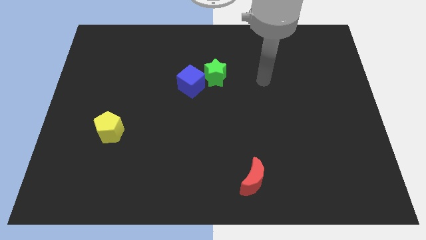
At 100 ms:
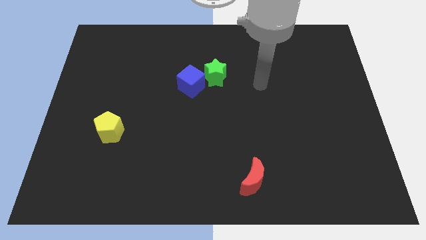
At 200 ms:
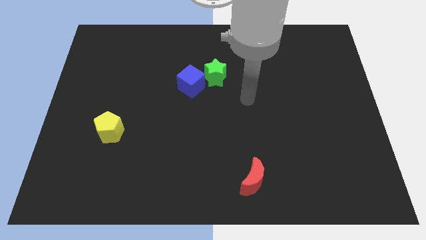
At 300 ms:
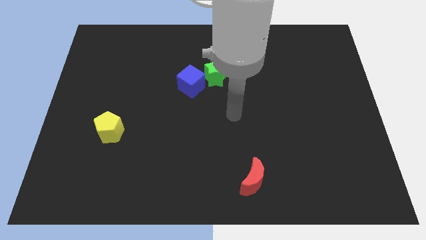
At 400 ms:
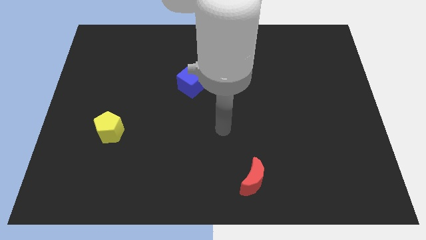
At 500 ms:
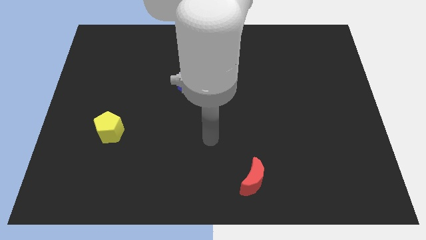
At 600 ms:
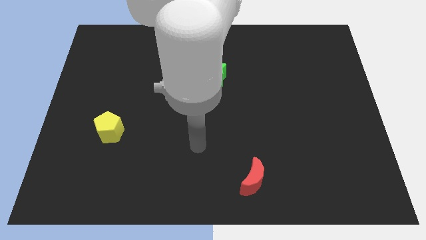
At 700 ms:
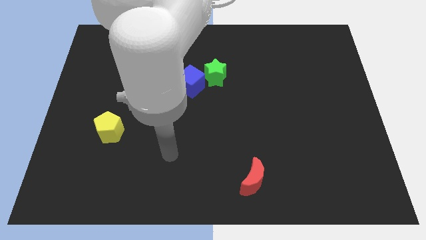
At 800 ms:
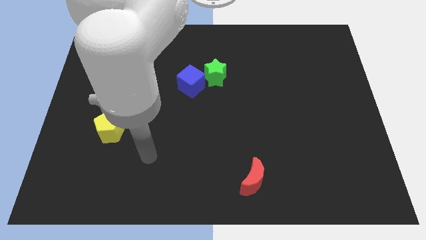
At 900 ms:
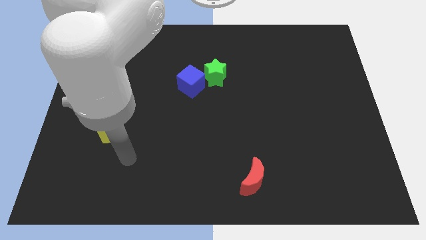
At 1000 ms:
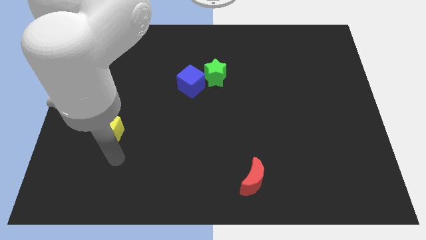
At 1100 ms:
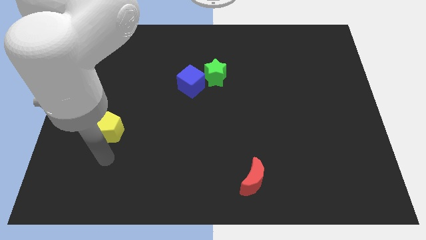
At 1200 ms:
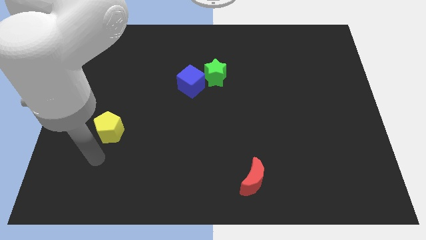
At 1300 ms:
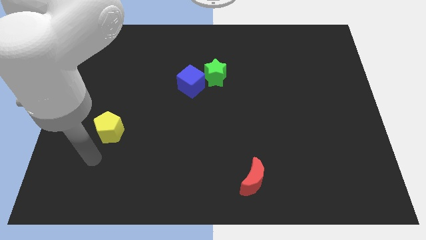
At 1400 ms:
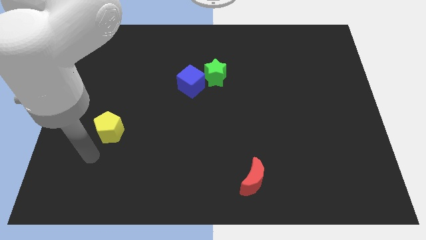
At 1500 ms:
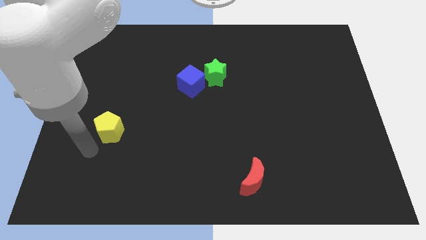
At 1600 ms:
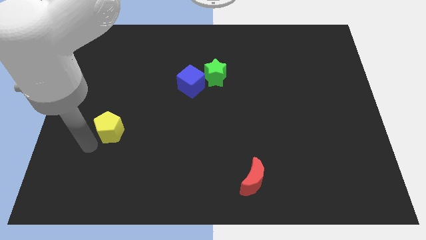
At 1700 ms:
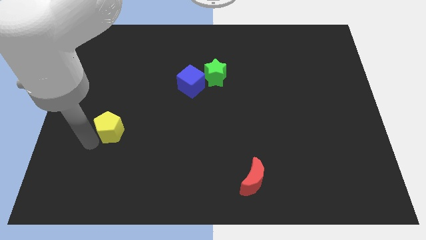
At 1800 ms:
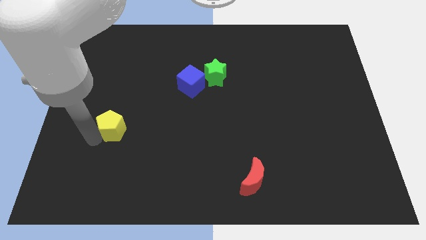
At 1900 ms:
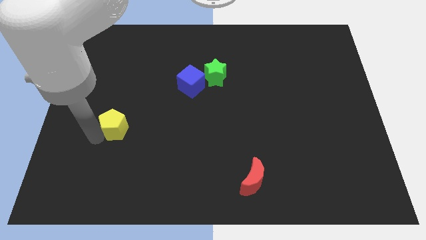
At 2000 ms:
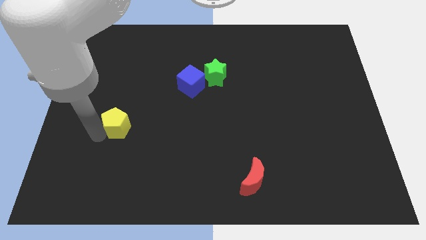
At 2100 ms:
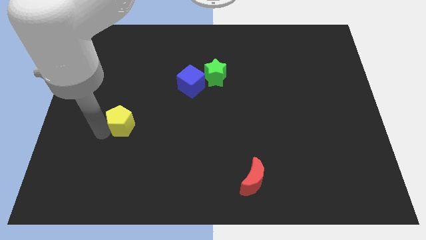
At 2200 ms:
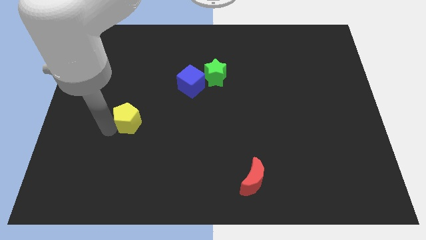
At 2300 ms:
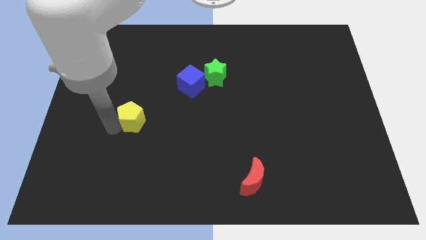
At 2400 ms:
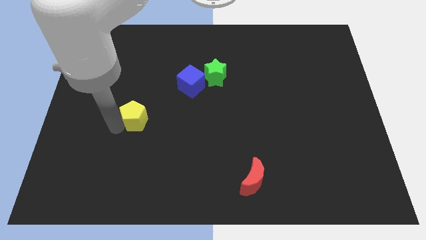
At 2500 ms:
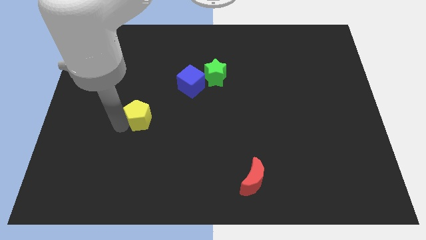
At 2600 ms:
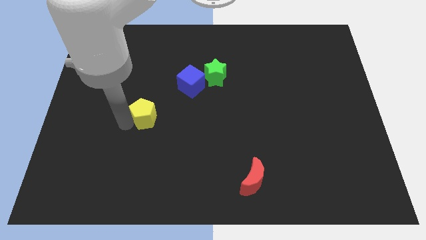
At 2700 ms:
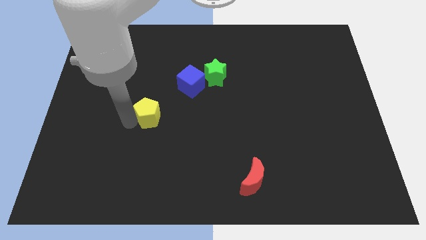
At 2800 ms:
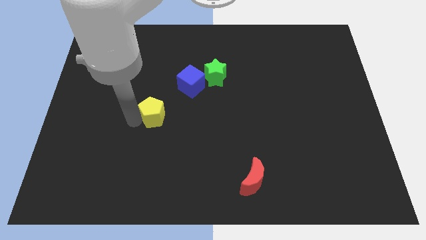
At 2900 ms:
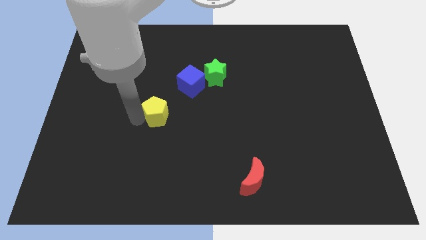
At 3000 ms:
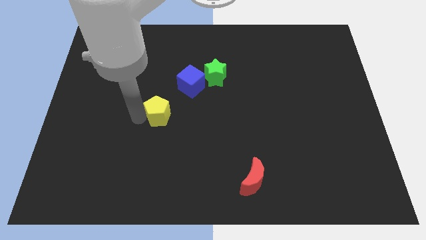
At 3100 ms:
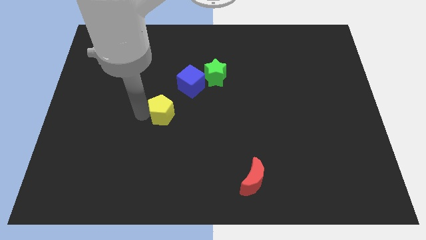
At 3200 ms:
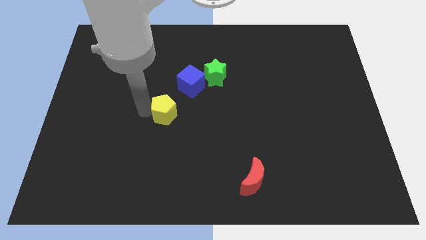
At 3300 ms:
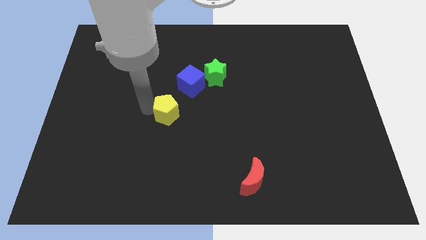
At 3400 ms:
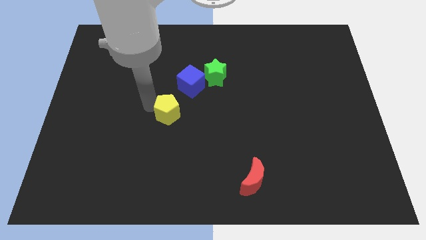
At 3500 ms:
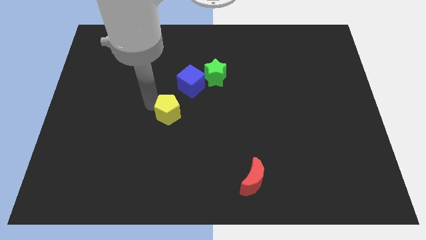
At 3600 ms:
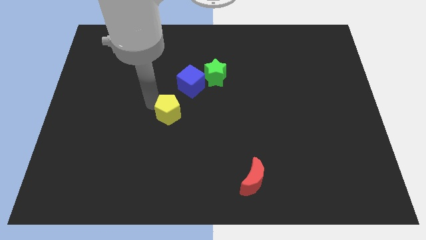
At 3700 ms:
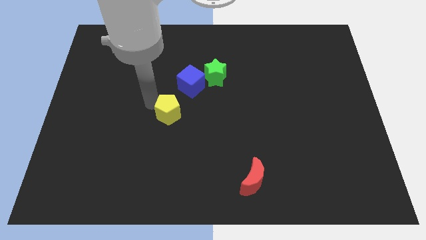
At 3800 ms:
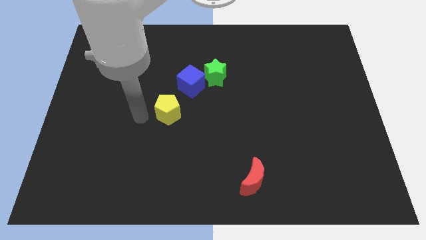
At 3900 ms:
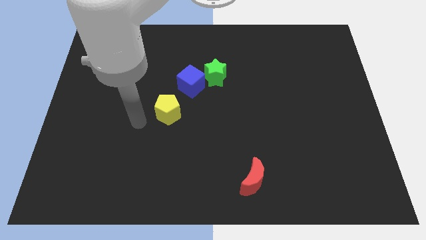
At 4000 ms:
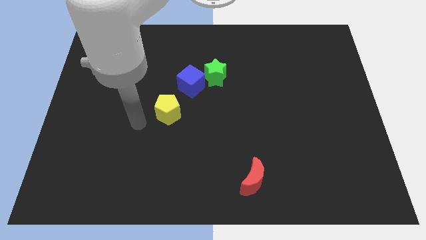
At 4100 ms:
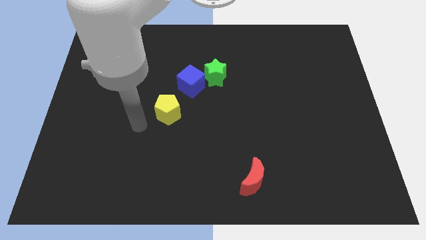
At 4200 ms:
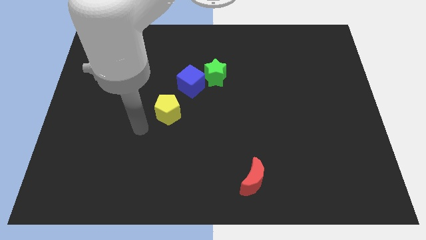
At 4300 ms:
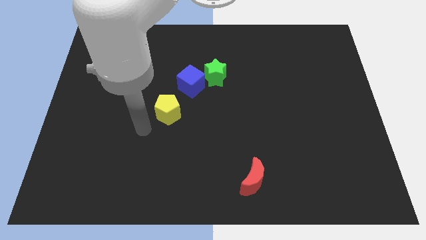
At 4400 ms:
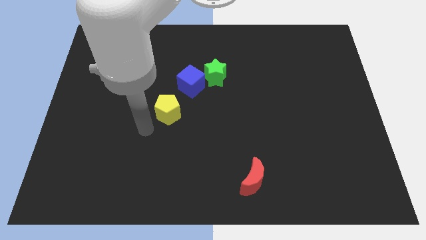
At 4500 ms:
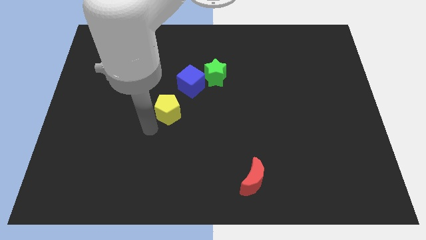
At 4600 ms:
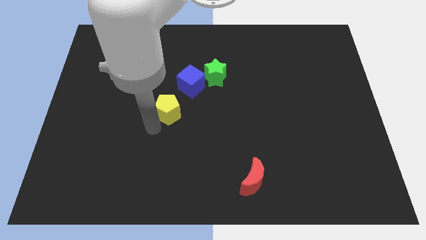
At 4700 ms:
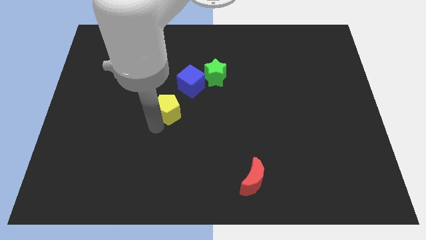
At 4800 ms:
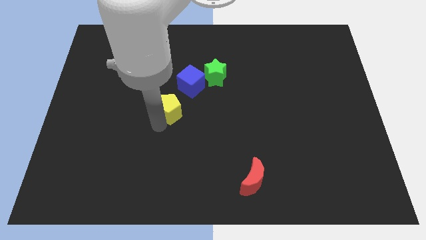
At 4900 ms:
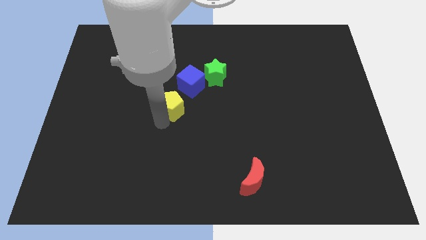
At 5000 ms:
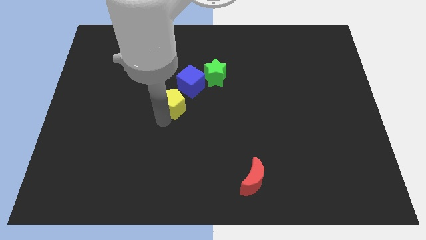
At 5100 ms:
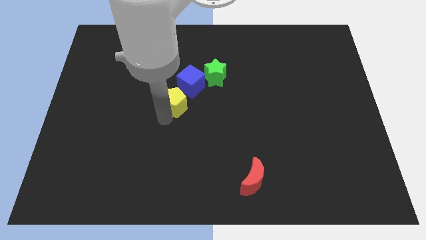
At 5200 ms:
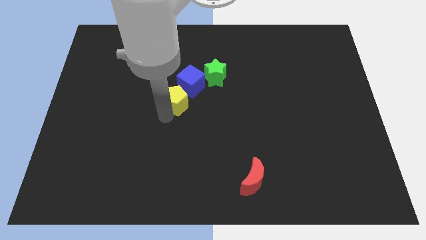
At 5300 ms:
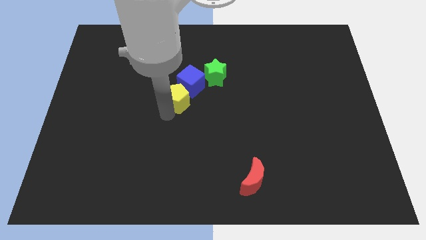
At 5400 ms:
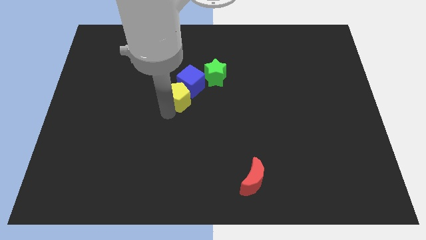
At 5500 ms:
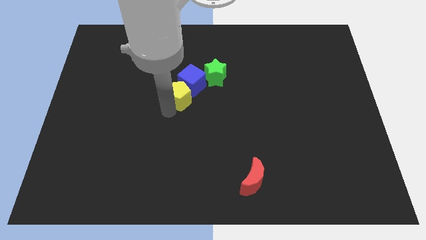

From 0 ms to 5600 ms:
put the yellow block next to the blue block

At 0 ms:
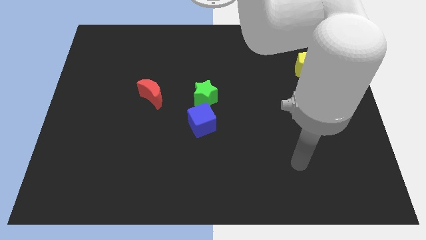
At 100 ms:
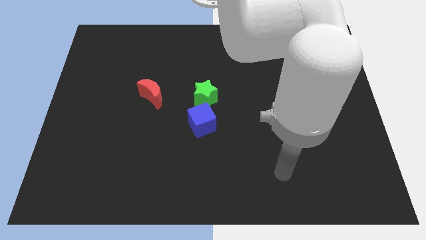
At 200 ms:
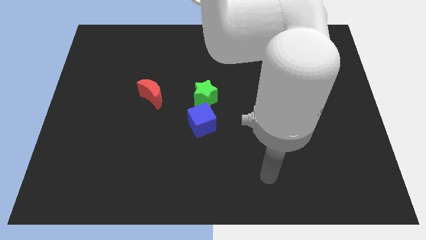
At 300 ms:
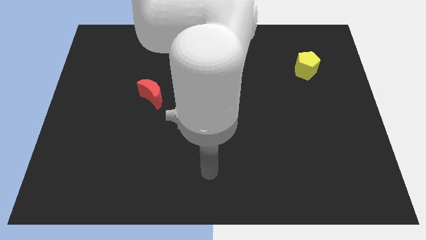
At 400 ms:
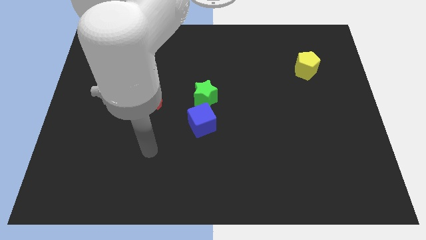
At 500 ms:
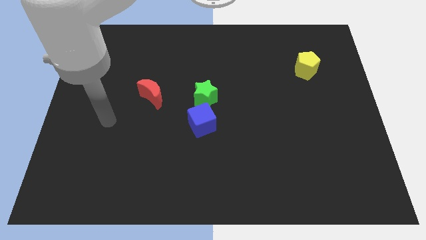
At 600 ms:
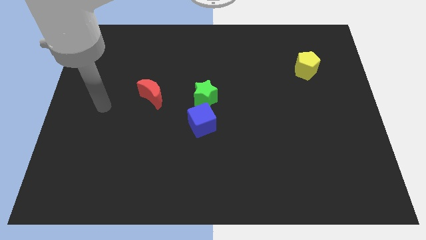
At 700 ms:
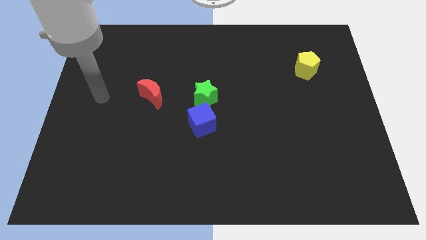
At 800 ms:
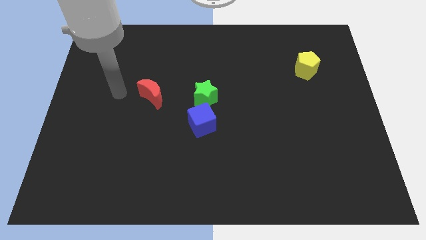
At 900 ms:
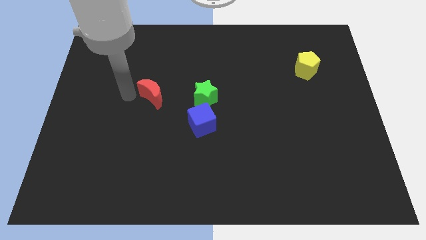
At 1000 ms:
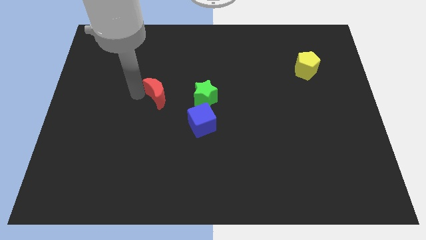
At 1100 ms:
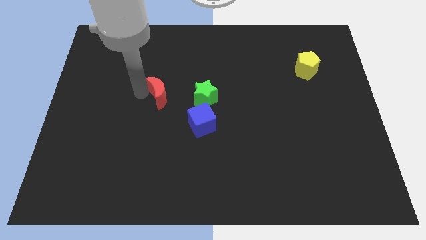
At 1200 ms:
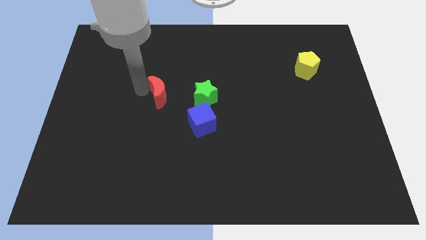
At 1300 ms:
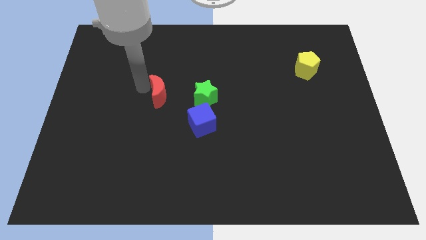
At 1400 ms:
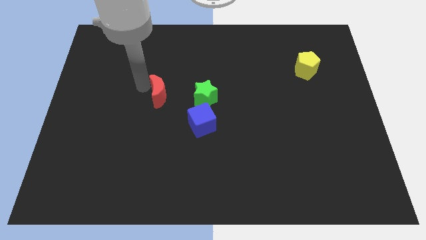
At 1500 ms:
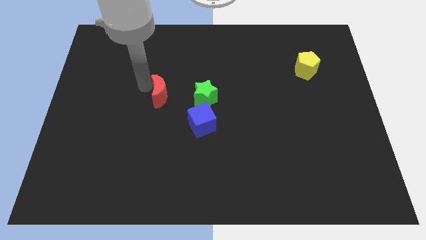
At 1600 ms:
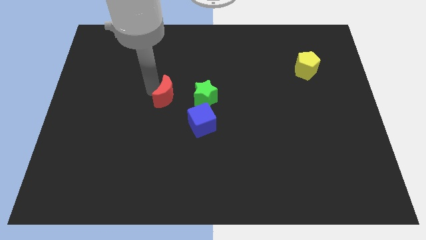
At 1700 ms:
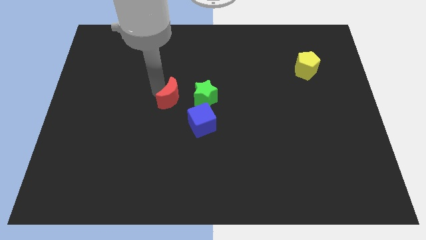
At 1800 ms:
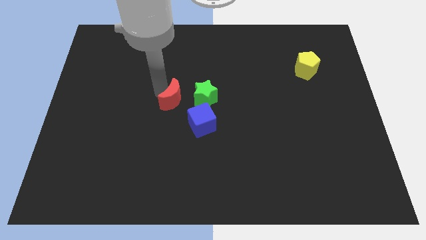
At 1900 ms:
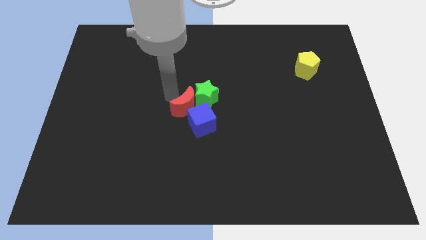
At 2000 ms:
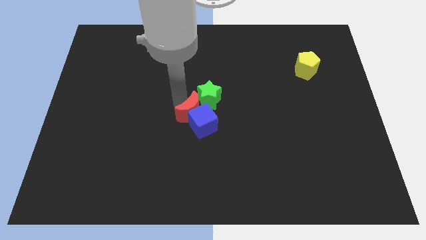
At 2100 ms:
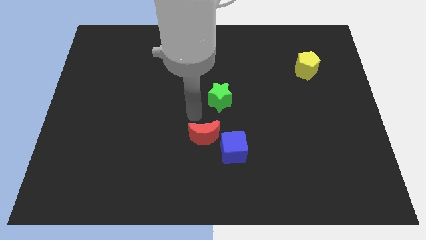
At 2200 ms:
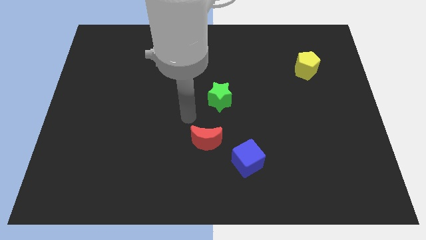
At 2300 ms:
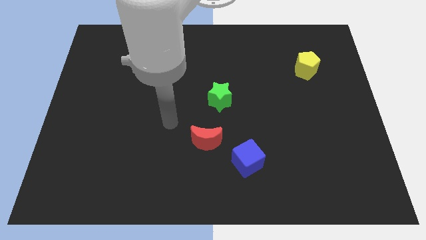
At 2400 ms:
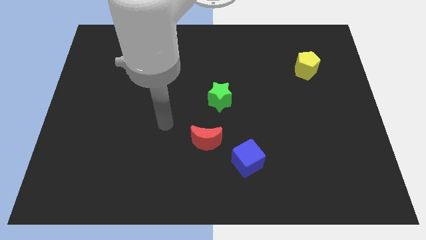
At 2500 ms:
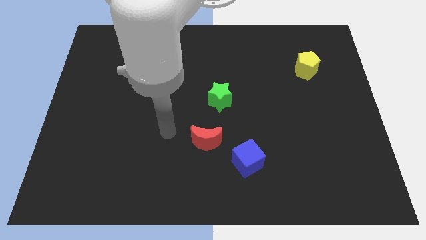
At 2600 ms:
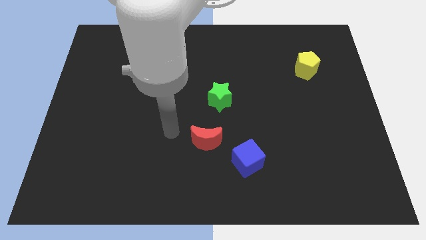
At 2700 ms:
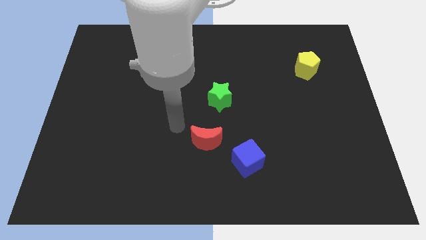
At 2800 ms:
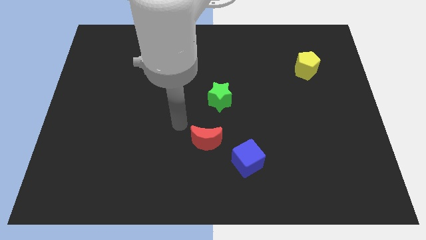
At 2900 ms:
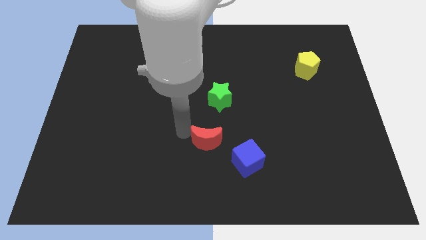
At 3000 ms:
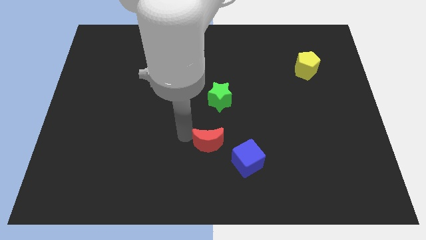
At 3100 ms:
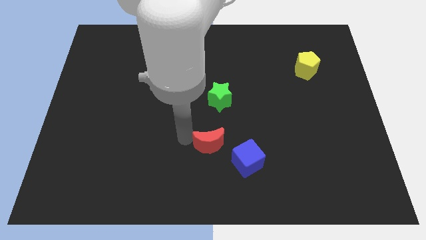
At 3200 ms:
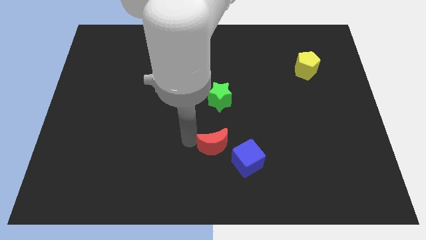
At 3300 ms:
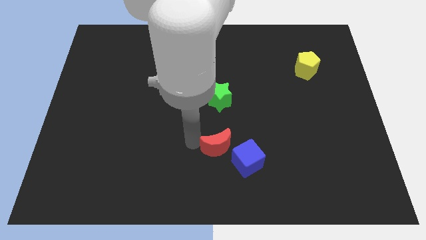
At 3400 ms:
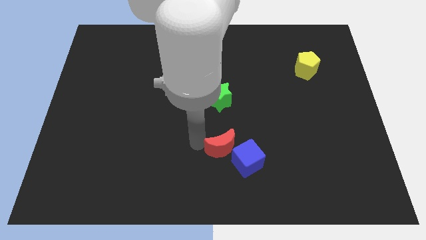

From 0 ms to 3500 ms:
slide the red moon close to the blue cube
